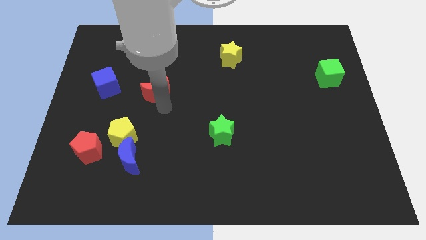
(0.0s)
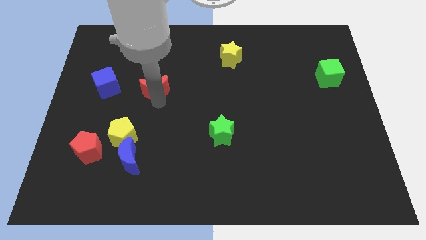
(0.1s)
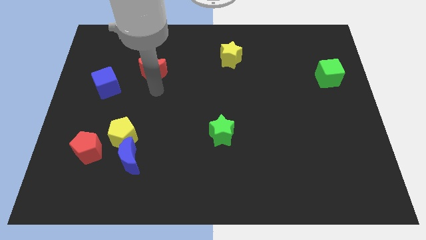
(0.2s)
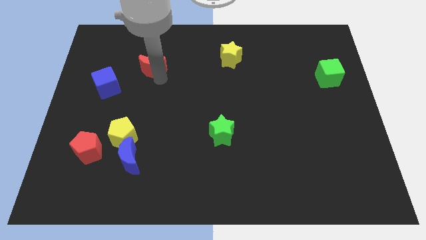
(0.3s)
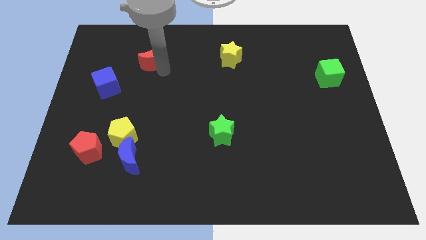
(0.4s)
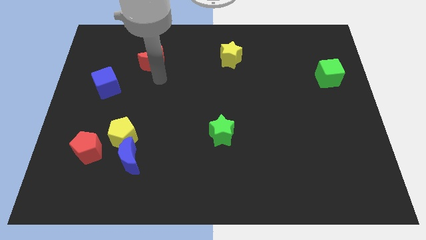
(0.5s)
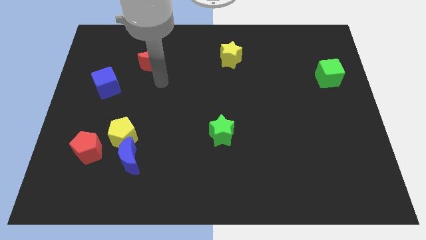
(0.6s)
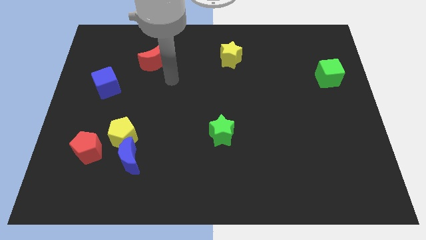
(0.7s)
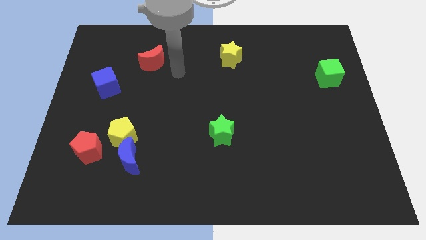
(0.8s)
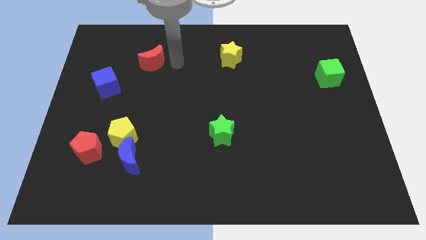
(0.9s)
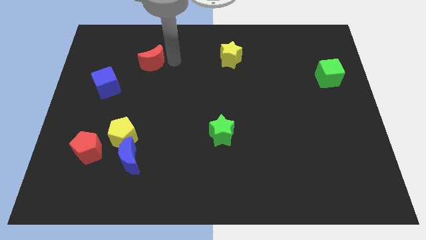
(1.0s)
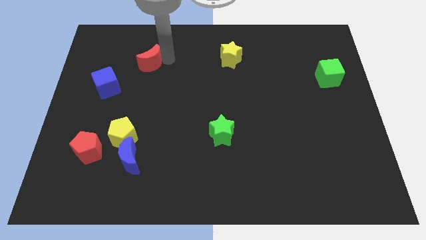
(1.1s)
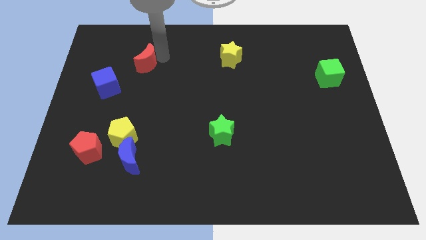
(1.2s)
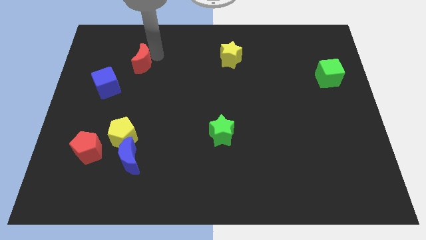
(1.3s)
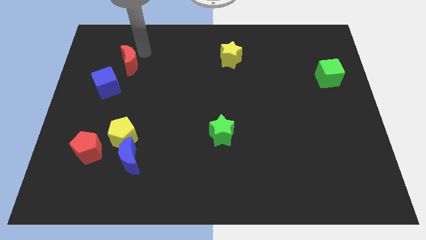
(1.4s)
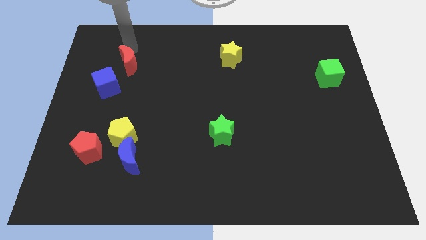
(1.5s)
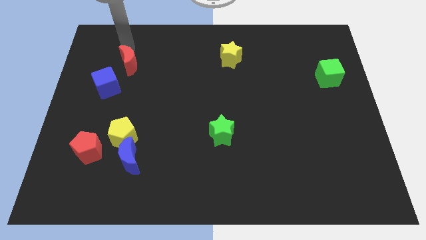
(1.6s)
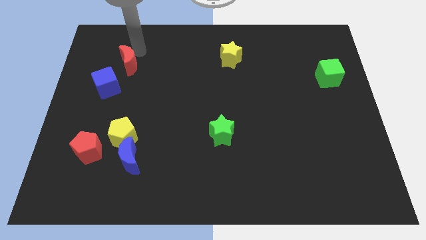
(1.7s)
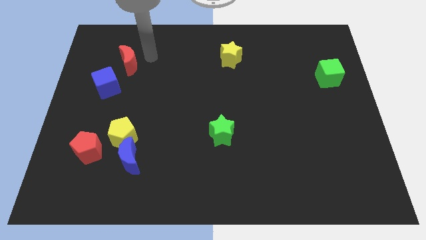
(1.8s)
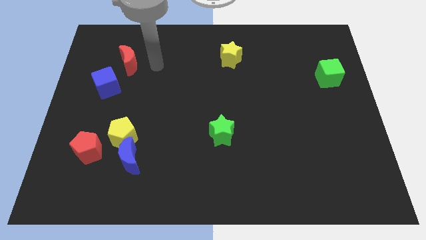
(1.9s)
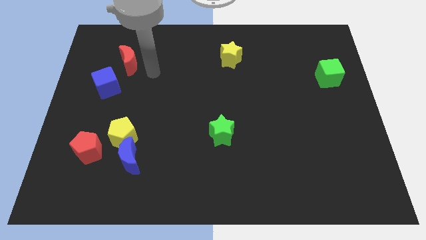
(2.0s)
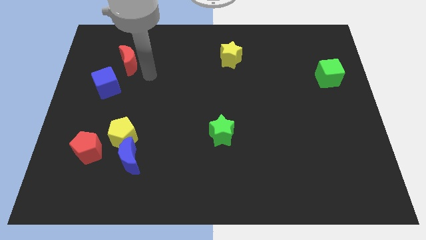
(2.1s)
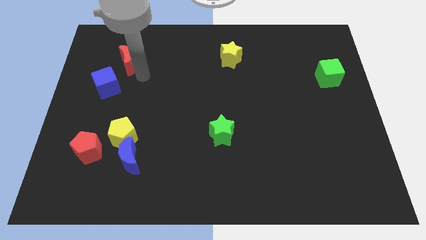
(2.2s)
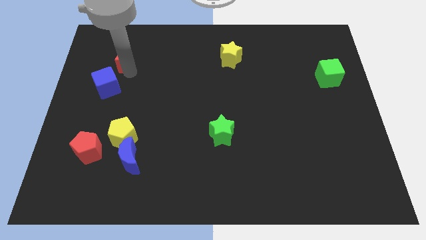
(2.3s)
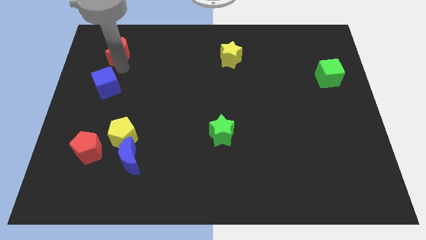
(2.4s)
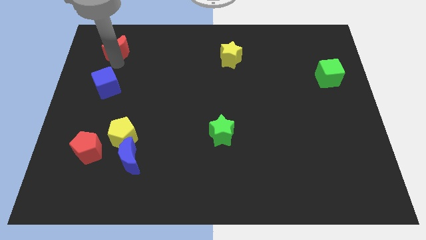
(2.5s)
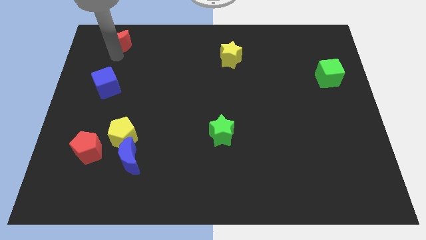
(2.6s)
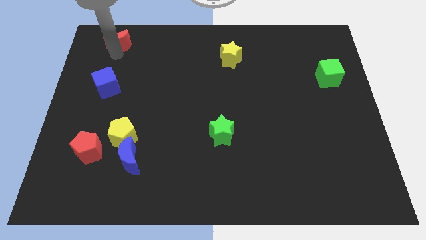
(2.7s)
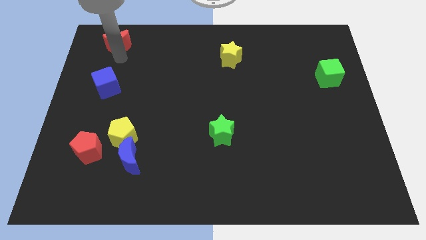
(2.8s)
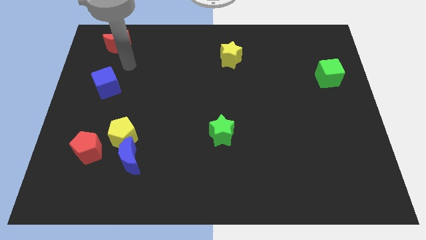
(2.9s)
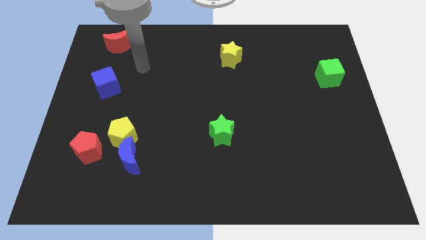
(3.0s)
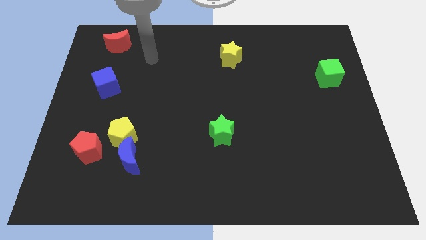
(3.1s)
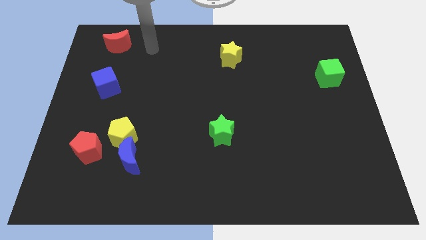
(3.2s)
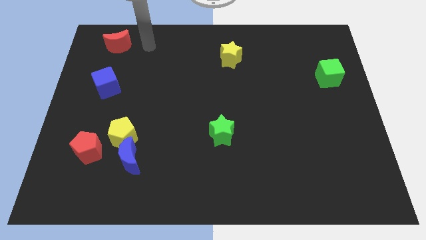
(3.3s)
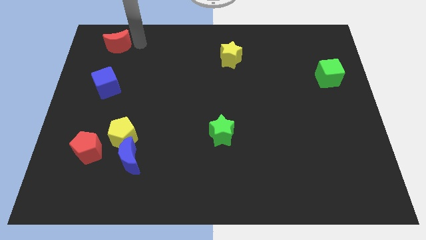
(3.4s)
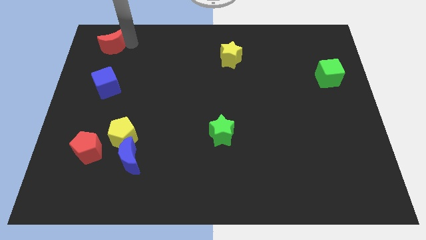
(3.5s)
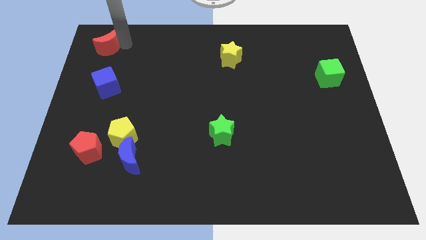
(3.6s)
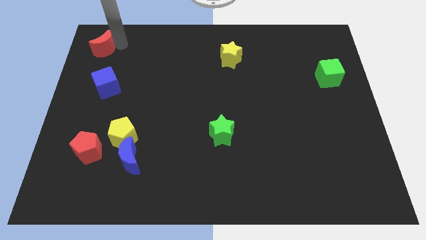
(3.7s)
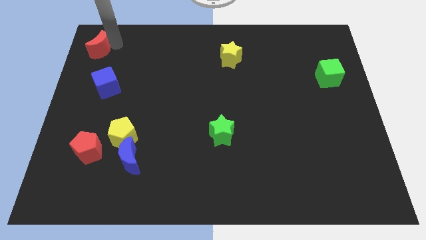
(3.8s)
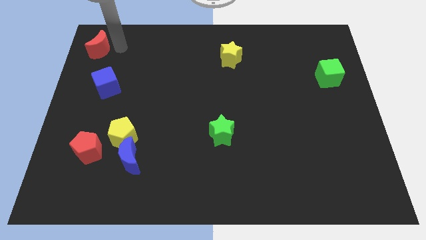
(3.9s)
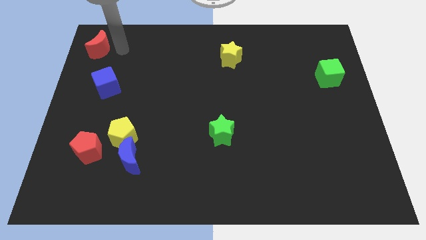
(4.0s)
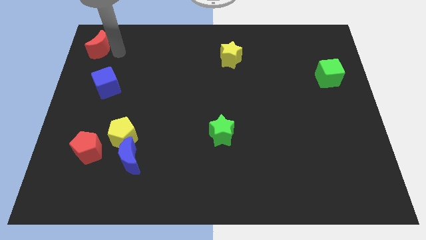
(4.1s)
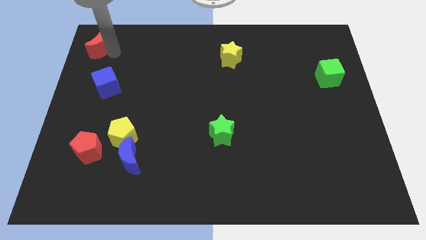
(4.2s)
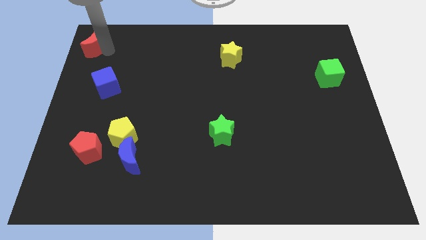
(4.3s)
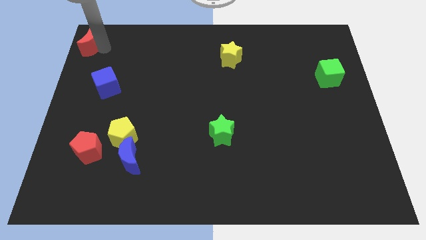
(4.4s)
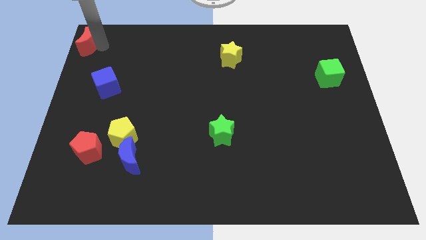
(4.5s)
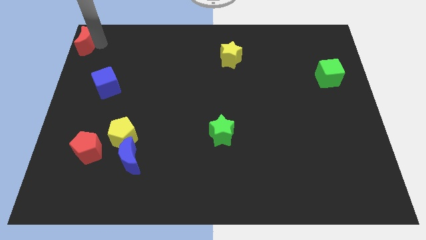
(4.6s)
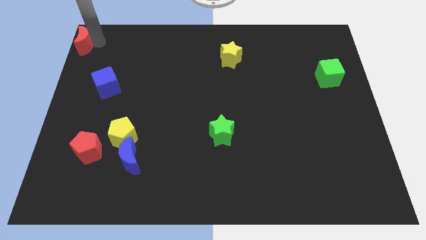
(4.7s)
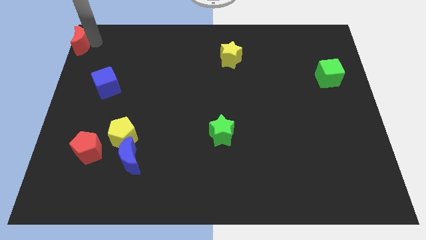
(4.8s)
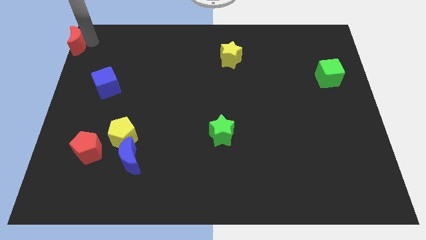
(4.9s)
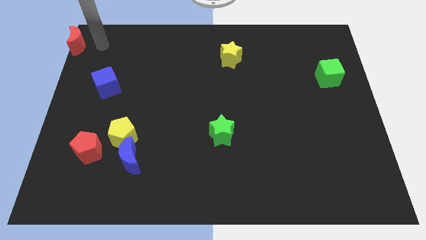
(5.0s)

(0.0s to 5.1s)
move the red moon to the top left corner of the board

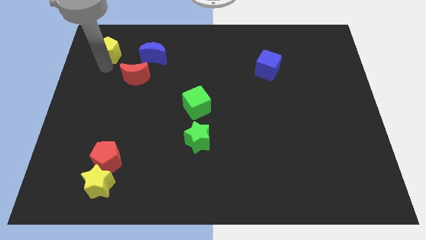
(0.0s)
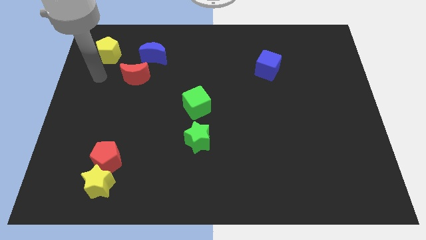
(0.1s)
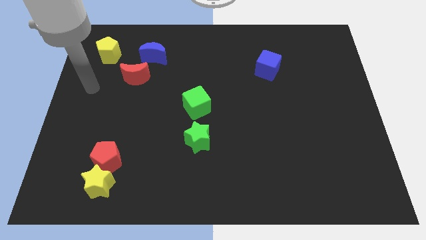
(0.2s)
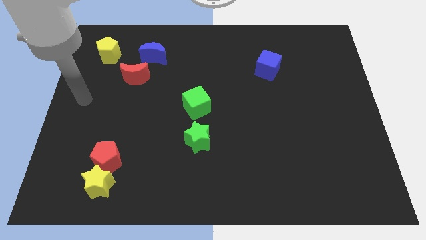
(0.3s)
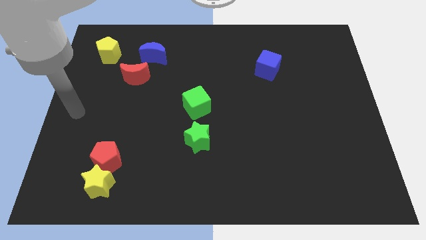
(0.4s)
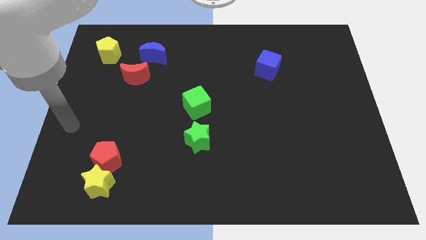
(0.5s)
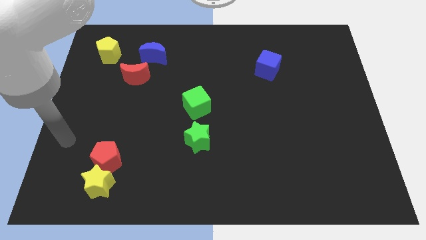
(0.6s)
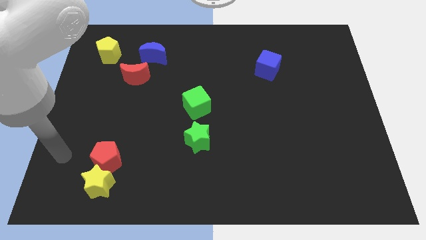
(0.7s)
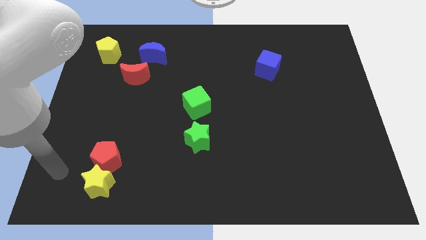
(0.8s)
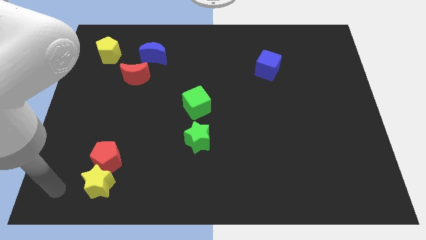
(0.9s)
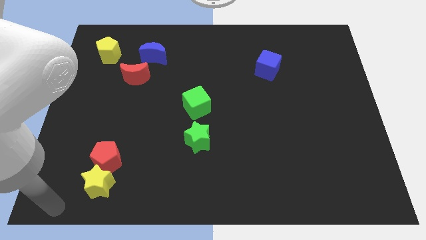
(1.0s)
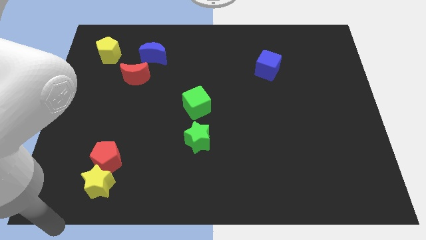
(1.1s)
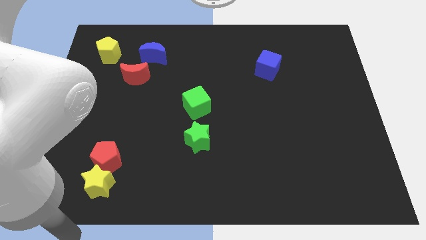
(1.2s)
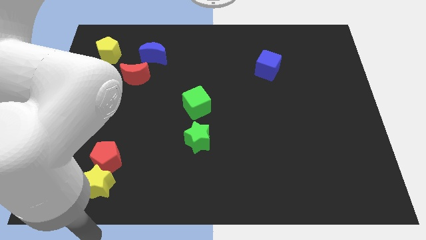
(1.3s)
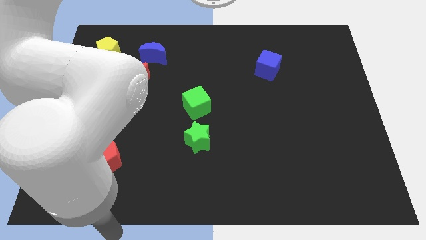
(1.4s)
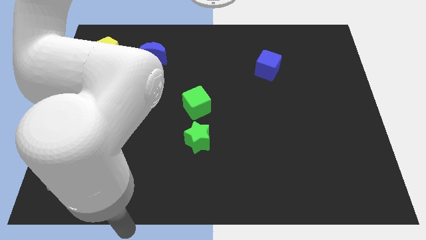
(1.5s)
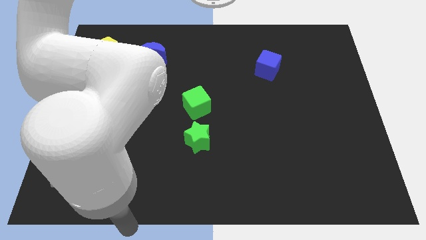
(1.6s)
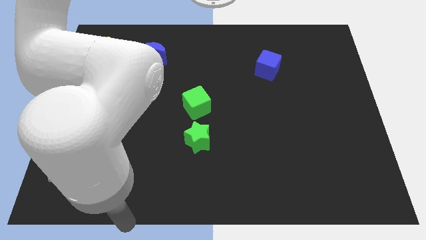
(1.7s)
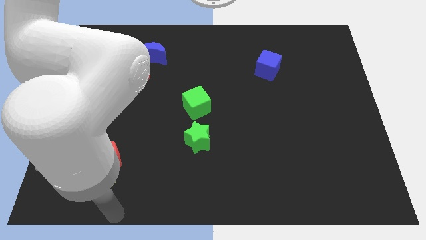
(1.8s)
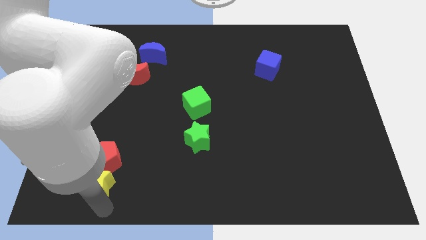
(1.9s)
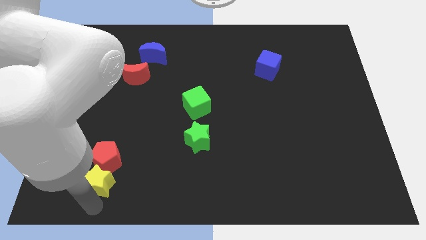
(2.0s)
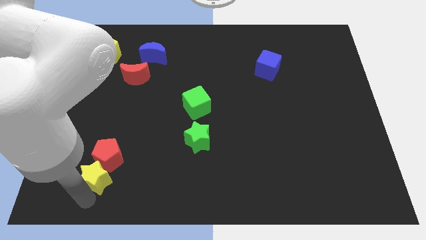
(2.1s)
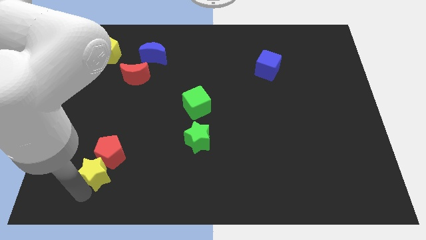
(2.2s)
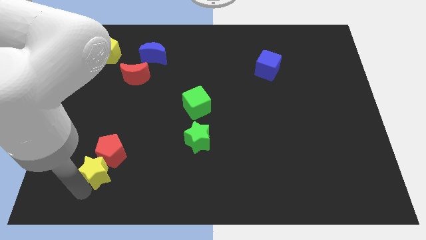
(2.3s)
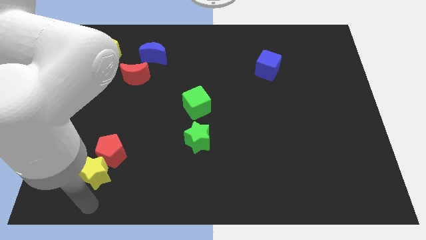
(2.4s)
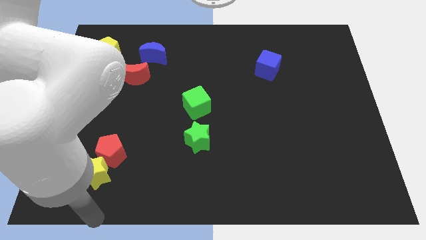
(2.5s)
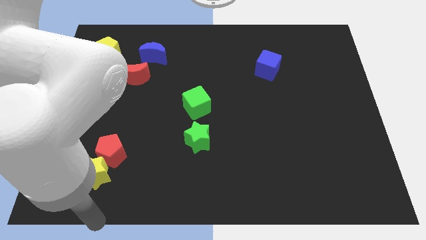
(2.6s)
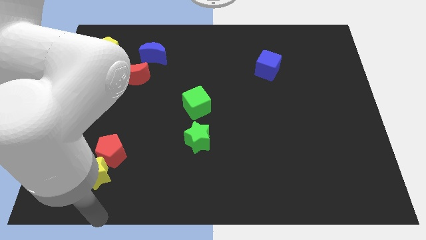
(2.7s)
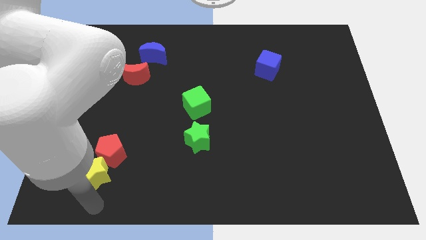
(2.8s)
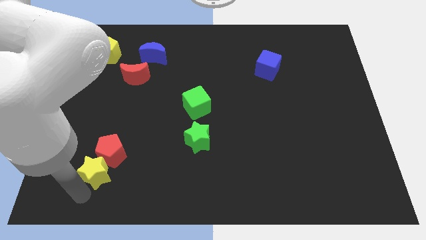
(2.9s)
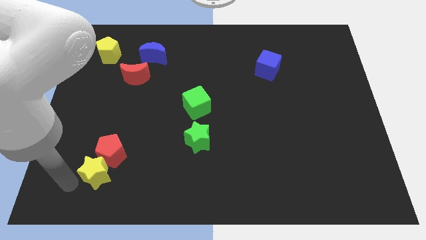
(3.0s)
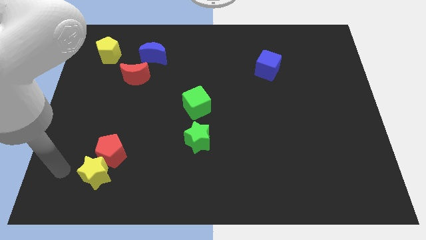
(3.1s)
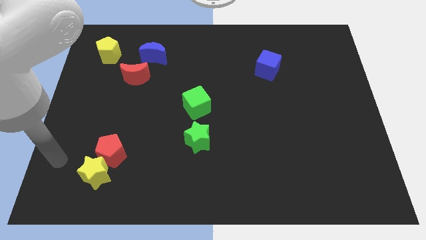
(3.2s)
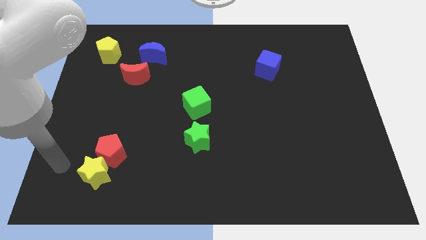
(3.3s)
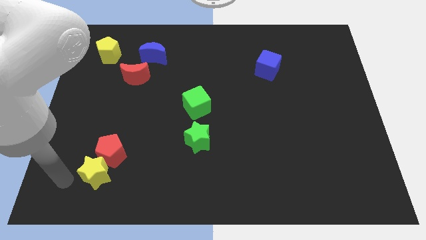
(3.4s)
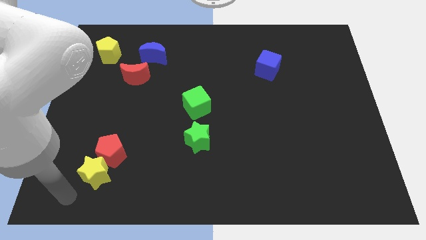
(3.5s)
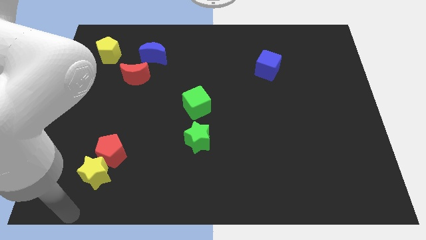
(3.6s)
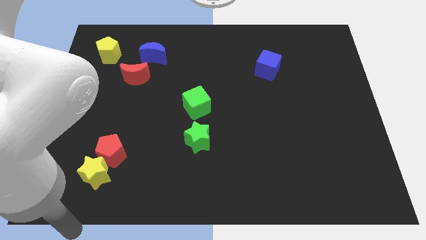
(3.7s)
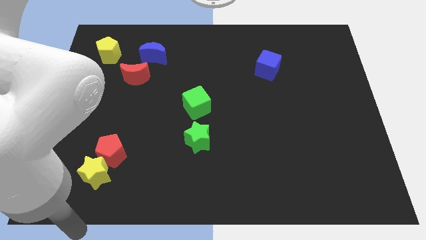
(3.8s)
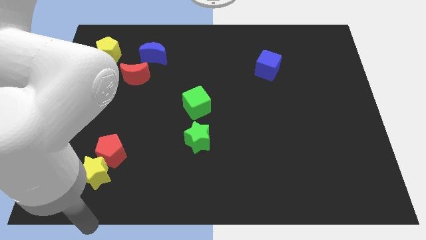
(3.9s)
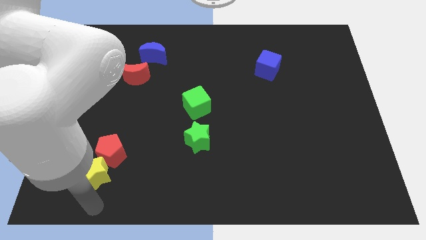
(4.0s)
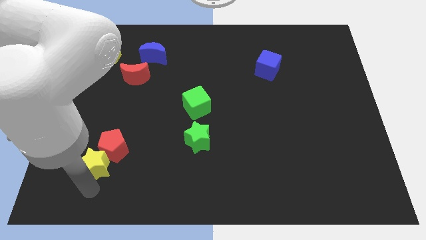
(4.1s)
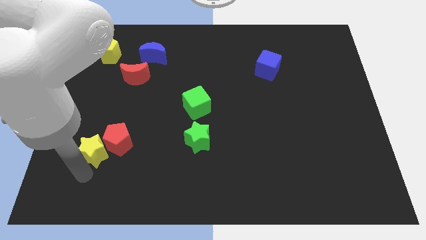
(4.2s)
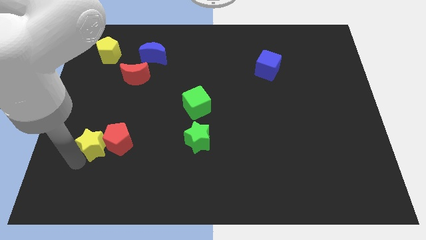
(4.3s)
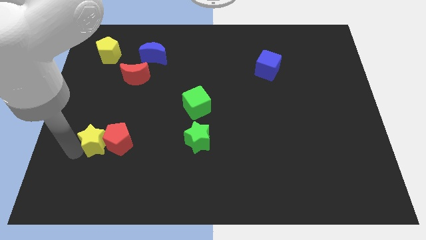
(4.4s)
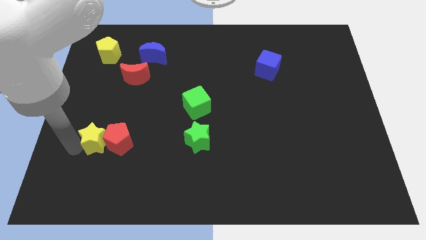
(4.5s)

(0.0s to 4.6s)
move the yellow star to the left of the red pentagon
